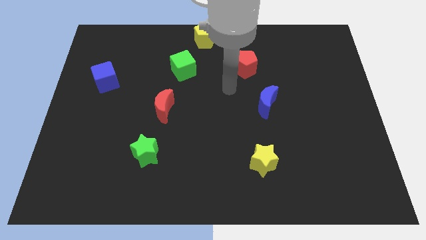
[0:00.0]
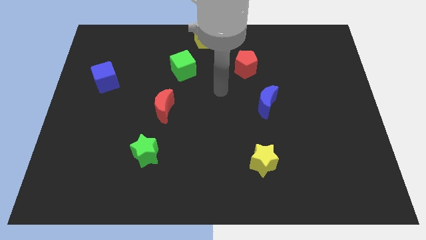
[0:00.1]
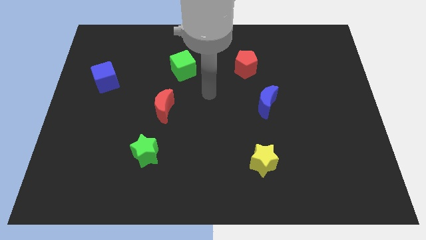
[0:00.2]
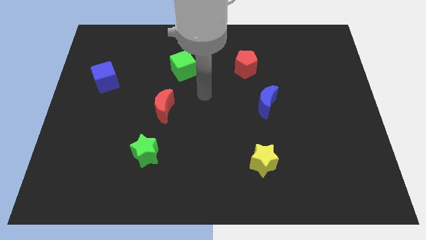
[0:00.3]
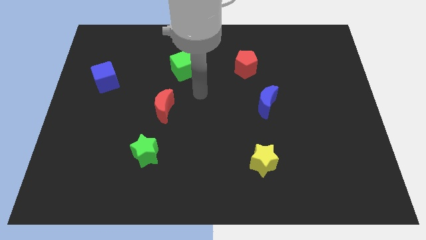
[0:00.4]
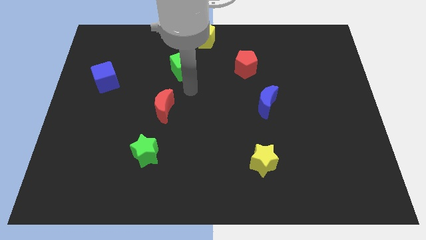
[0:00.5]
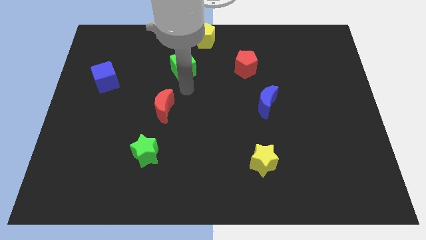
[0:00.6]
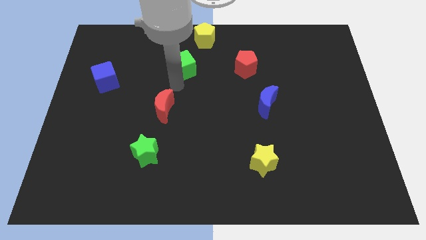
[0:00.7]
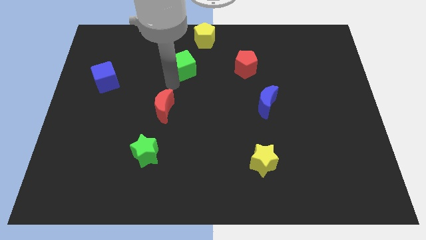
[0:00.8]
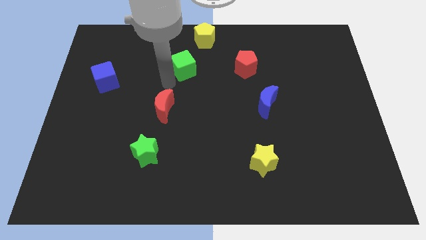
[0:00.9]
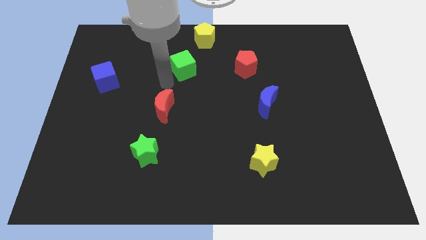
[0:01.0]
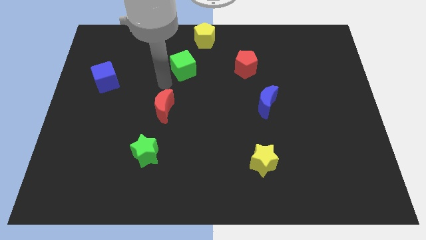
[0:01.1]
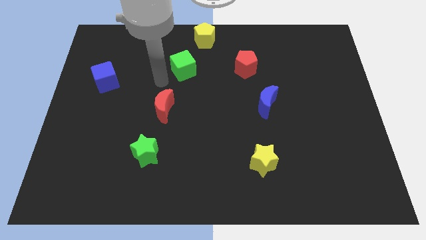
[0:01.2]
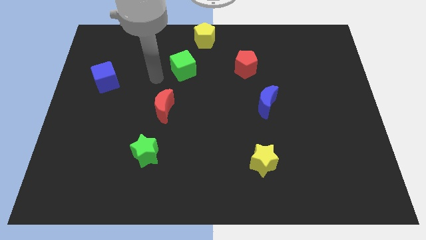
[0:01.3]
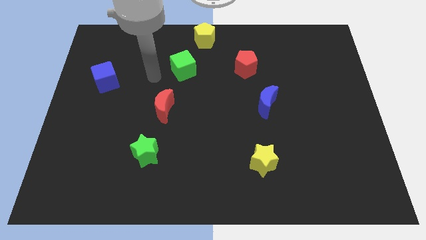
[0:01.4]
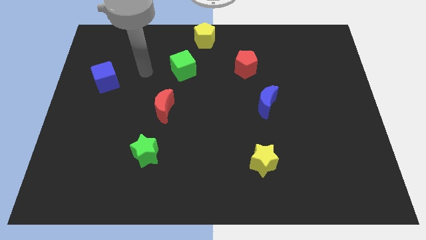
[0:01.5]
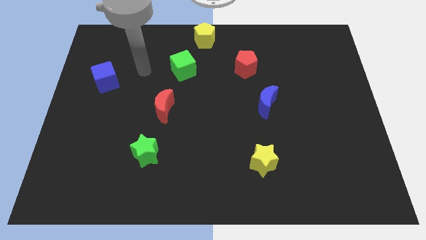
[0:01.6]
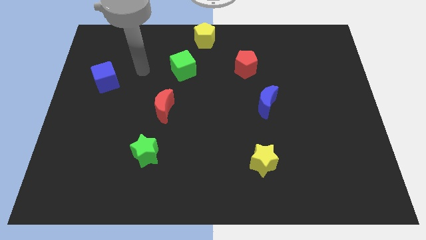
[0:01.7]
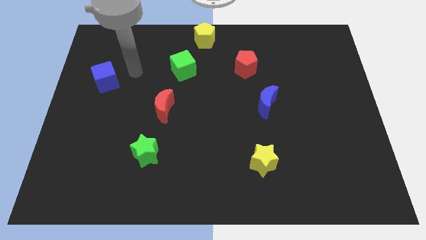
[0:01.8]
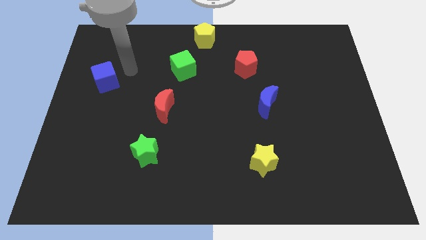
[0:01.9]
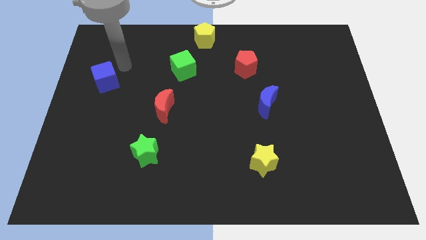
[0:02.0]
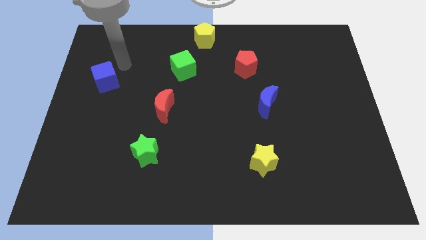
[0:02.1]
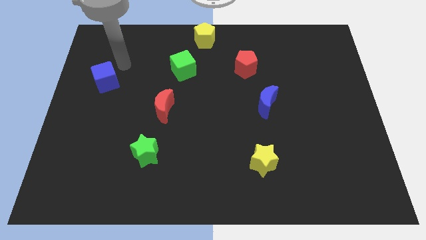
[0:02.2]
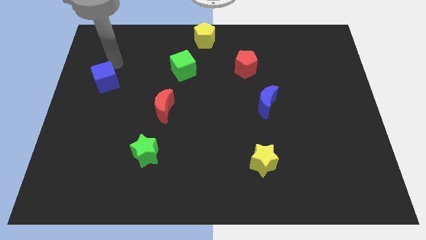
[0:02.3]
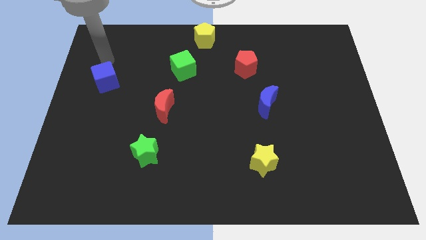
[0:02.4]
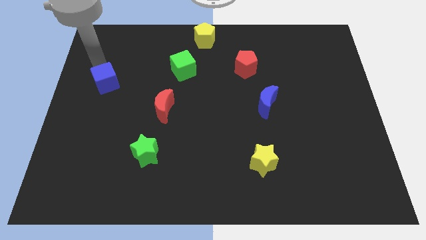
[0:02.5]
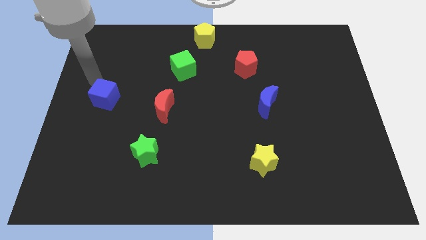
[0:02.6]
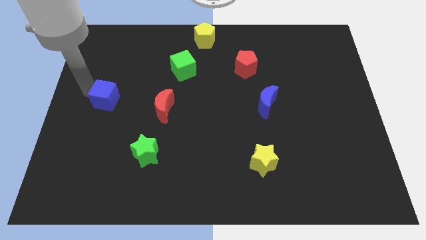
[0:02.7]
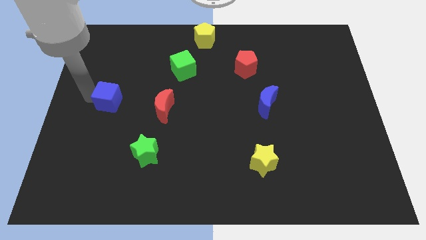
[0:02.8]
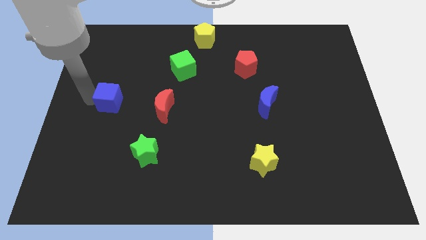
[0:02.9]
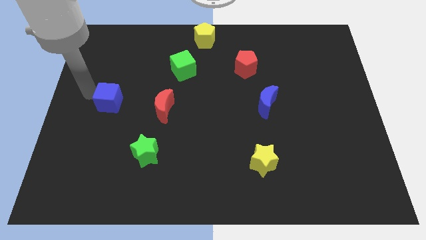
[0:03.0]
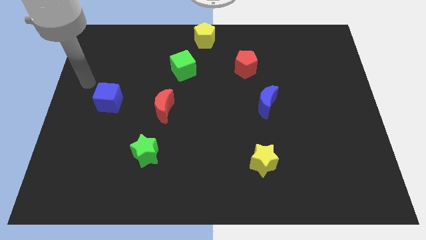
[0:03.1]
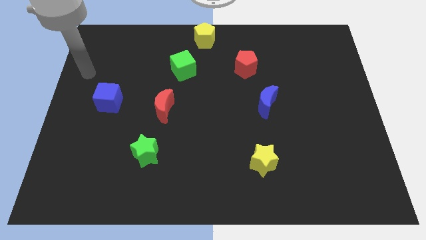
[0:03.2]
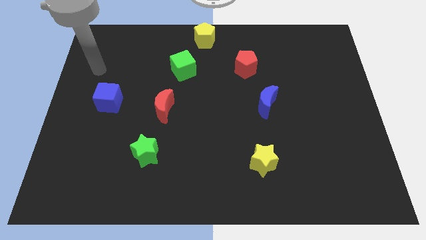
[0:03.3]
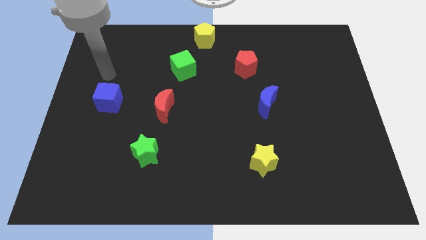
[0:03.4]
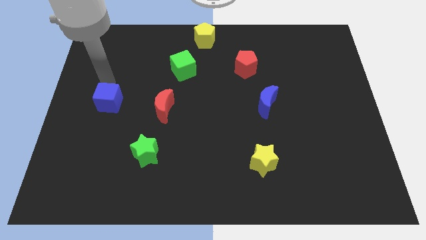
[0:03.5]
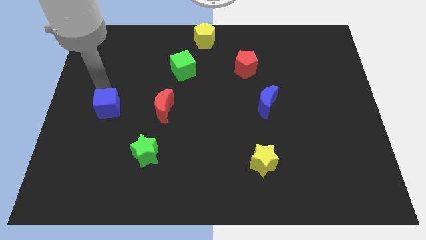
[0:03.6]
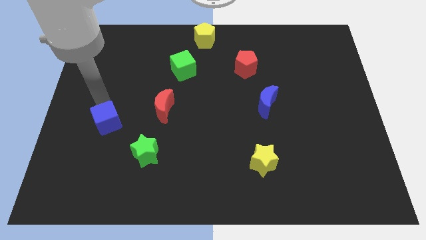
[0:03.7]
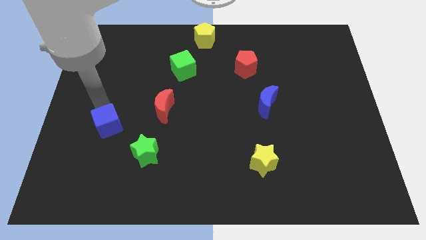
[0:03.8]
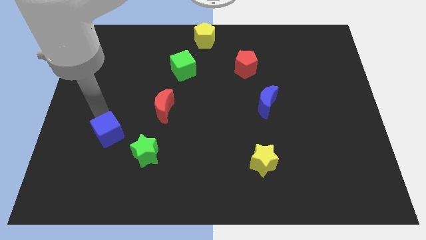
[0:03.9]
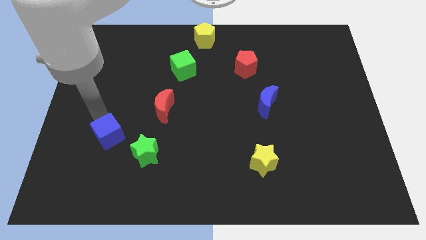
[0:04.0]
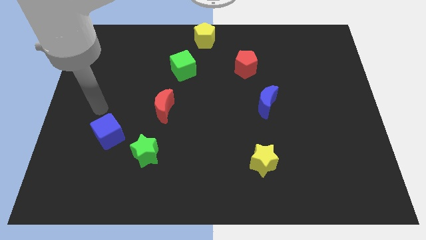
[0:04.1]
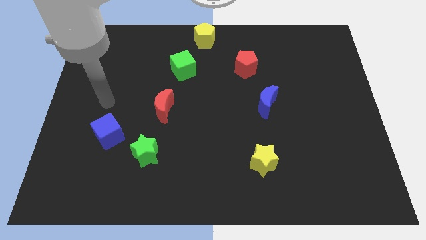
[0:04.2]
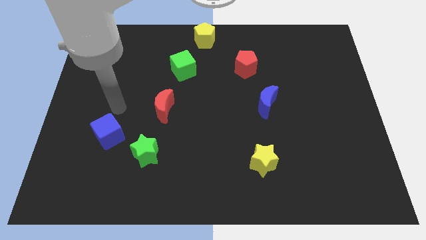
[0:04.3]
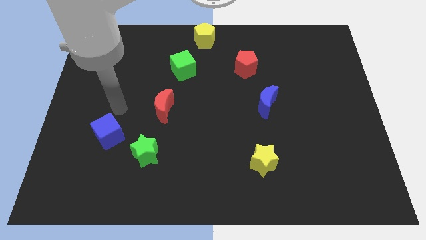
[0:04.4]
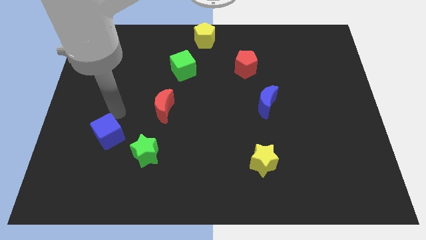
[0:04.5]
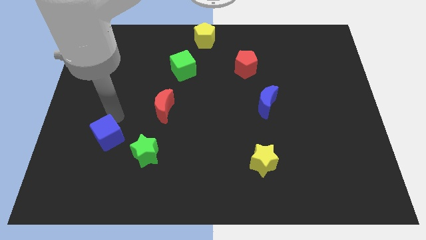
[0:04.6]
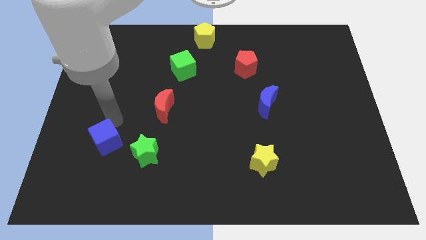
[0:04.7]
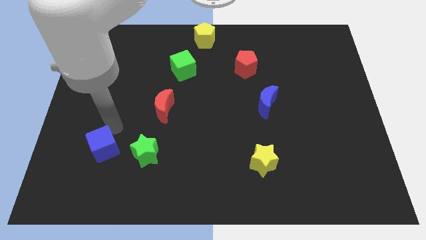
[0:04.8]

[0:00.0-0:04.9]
place the blue cube to the left of the green star

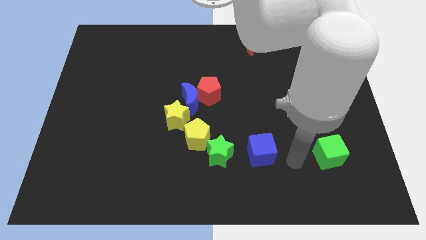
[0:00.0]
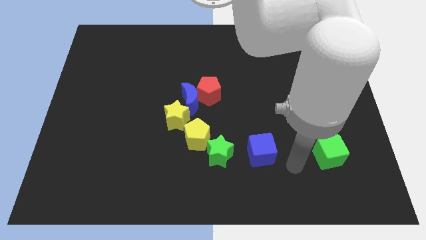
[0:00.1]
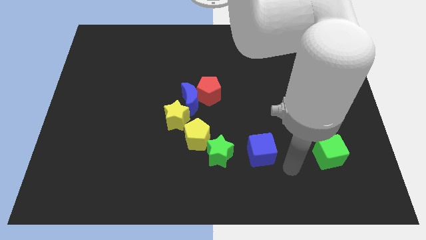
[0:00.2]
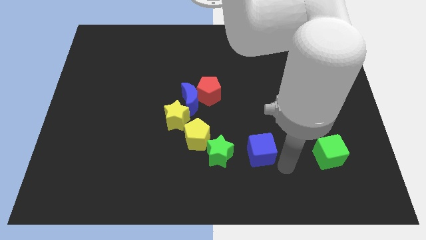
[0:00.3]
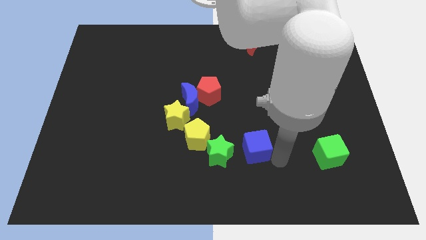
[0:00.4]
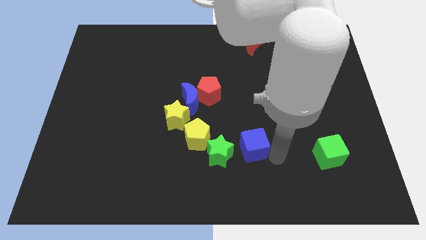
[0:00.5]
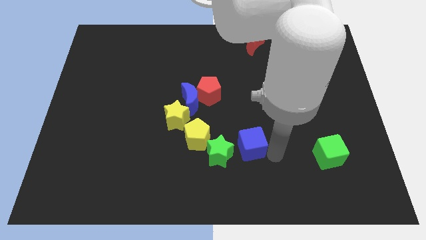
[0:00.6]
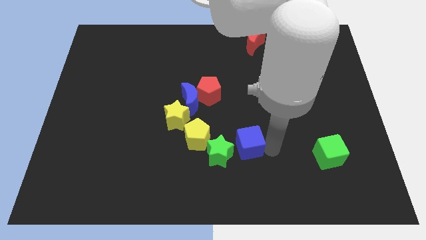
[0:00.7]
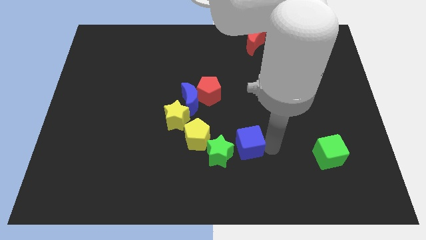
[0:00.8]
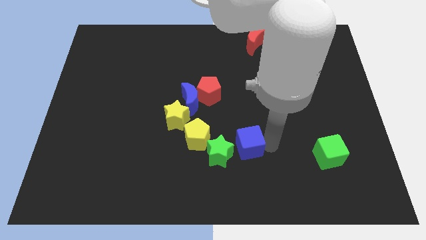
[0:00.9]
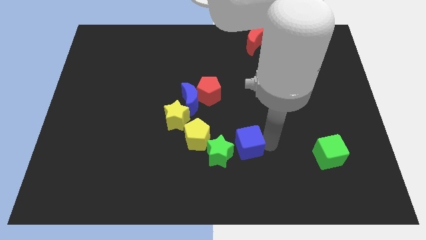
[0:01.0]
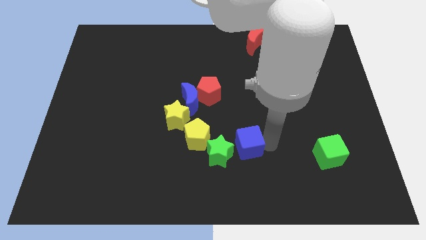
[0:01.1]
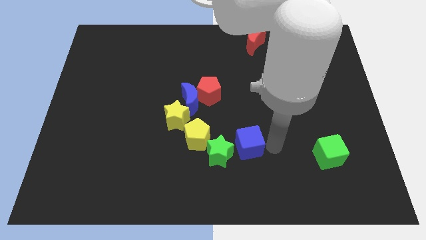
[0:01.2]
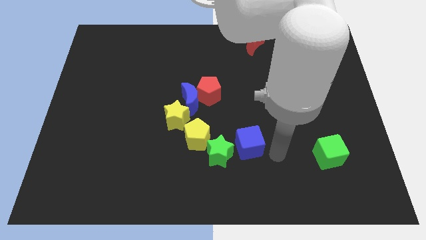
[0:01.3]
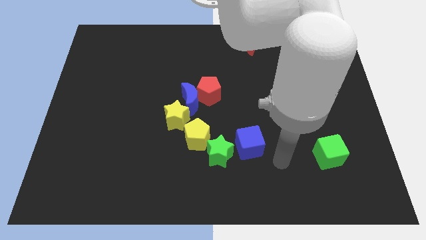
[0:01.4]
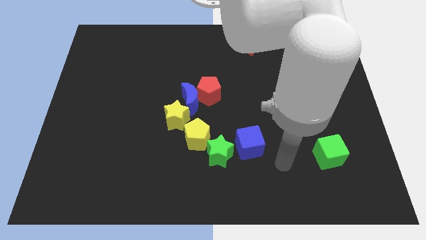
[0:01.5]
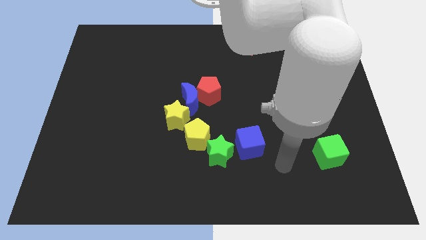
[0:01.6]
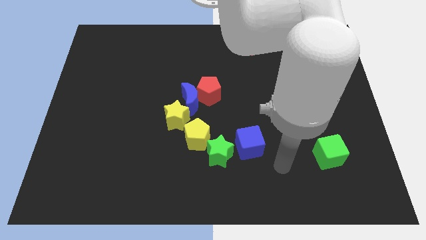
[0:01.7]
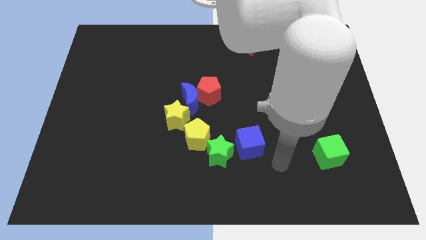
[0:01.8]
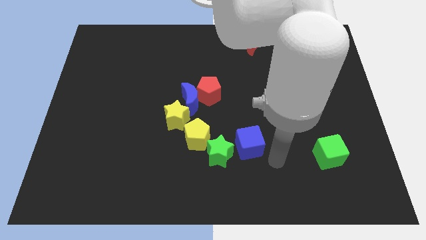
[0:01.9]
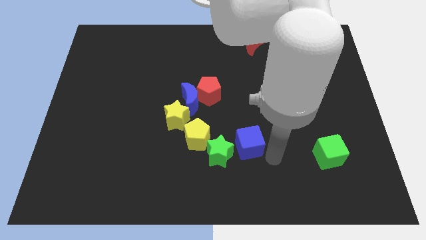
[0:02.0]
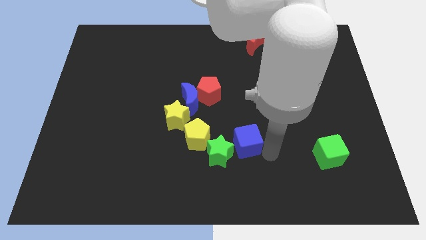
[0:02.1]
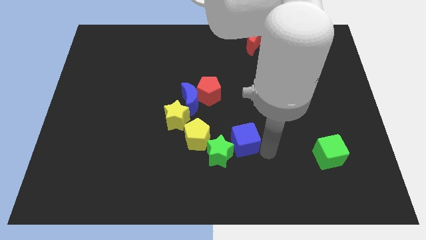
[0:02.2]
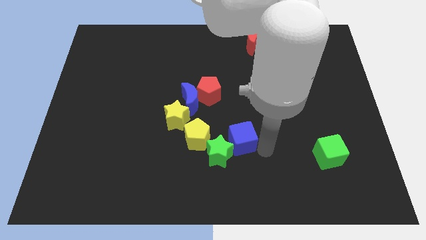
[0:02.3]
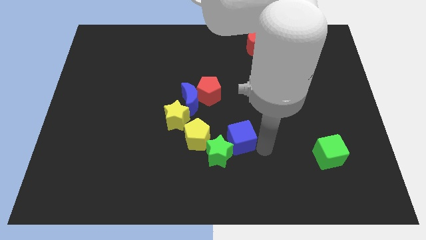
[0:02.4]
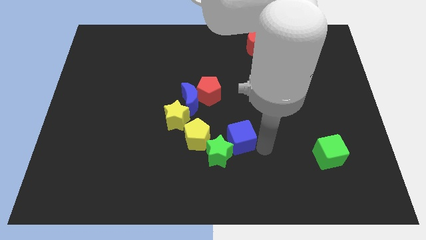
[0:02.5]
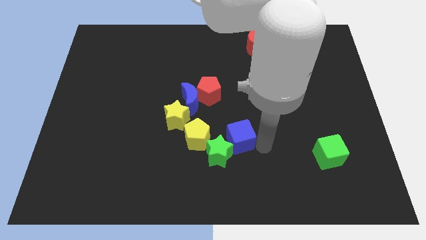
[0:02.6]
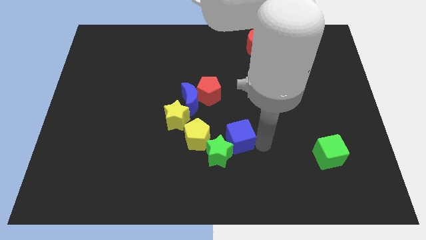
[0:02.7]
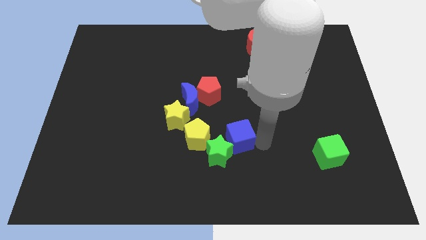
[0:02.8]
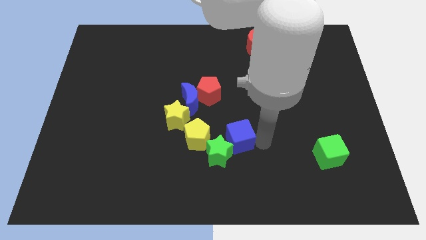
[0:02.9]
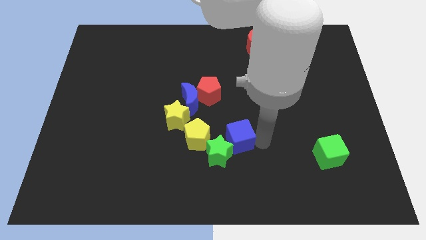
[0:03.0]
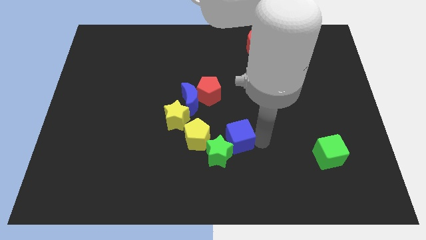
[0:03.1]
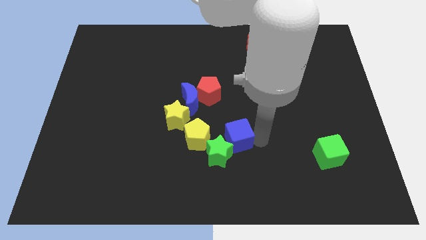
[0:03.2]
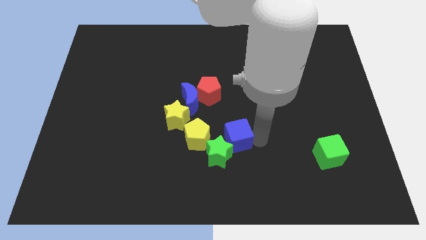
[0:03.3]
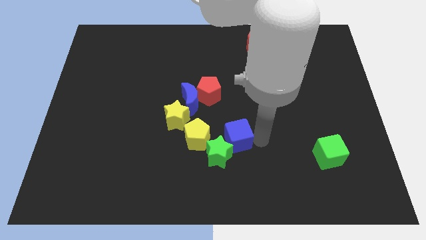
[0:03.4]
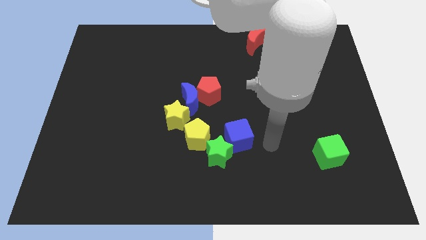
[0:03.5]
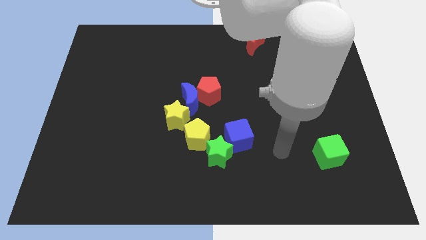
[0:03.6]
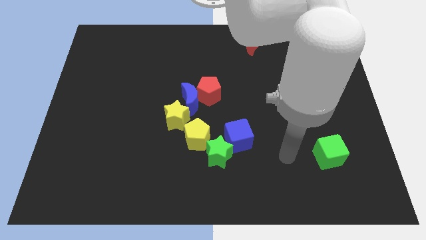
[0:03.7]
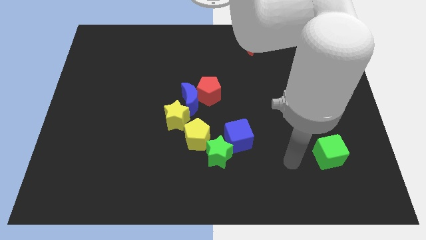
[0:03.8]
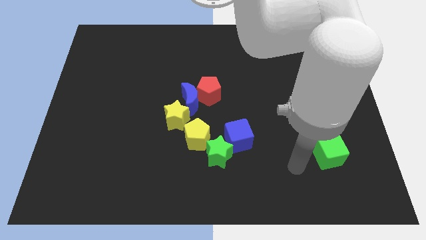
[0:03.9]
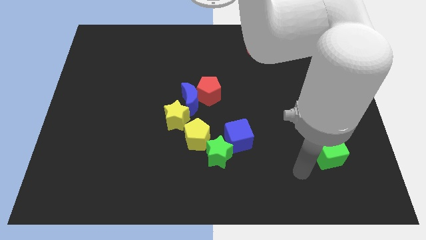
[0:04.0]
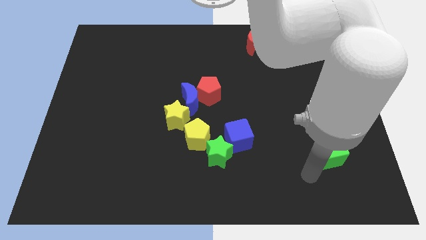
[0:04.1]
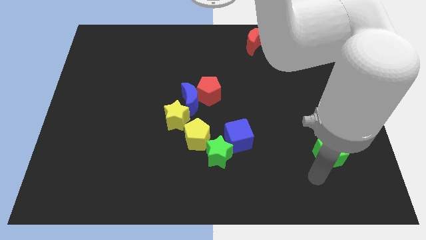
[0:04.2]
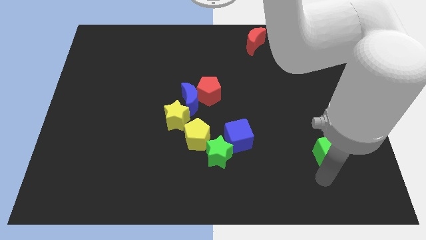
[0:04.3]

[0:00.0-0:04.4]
move the blue cube to the top right of the green star
